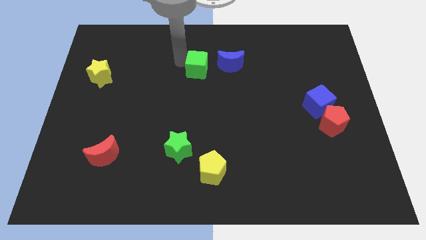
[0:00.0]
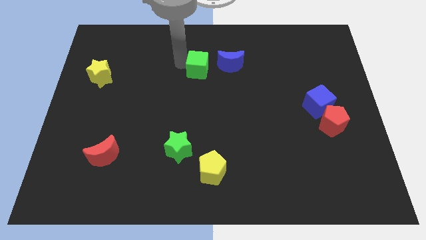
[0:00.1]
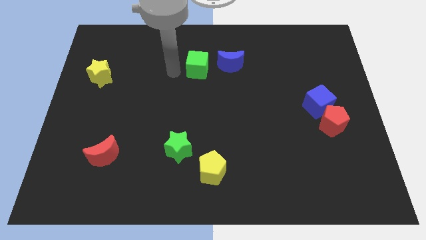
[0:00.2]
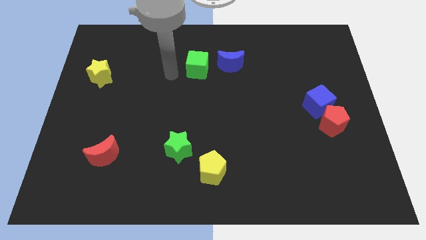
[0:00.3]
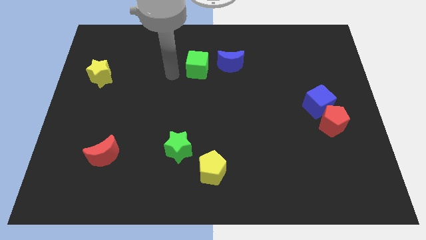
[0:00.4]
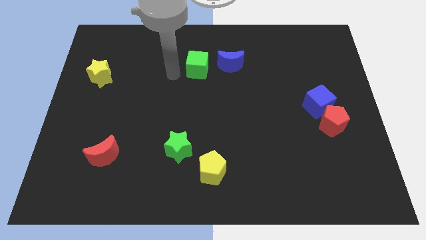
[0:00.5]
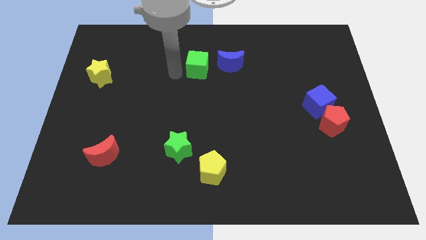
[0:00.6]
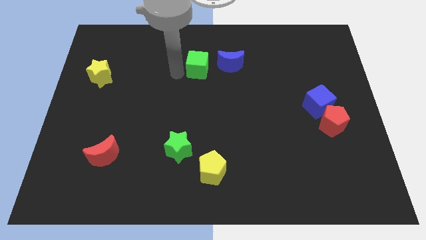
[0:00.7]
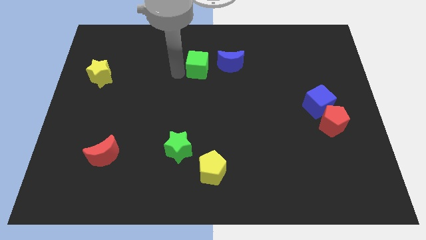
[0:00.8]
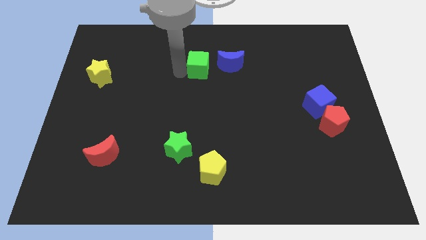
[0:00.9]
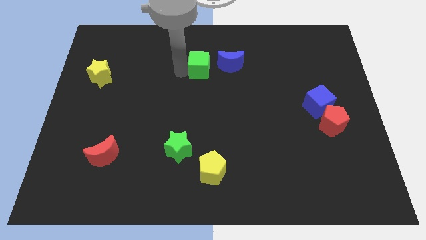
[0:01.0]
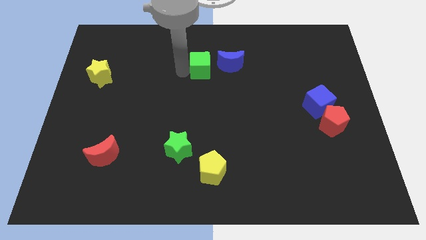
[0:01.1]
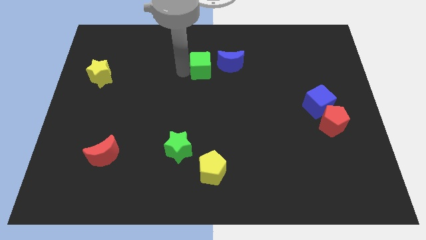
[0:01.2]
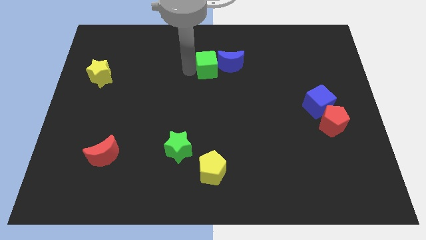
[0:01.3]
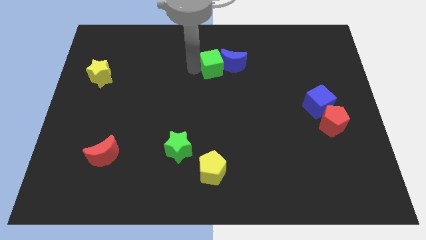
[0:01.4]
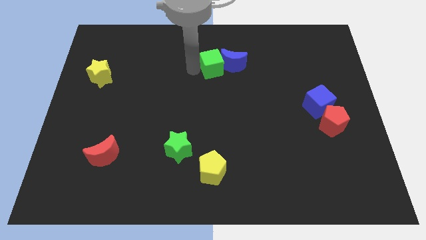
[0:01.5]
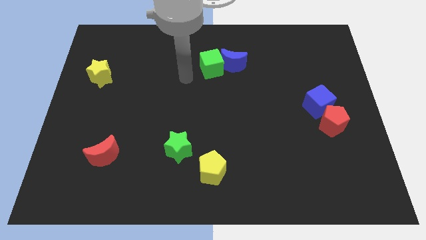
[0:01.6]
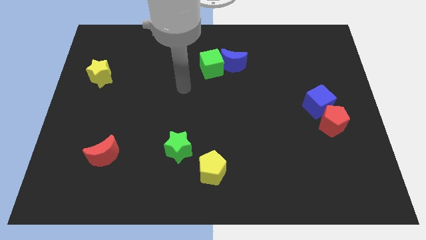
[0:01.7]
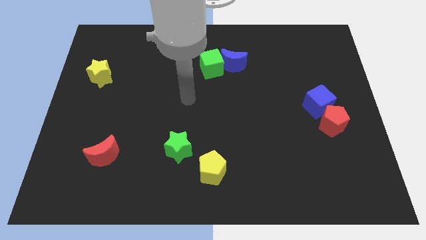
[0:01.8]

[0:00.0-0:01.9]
slide the green cube into the blue moon

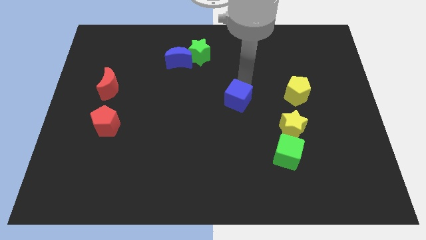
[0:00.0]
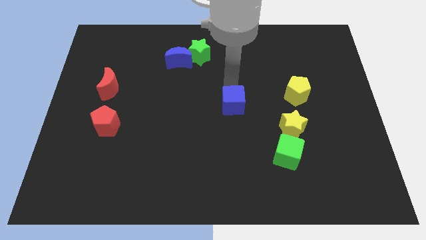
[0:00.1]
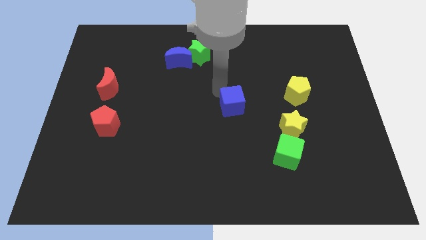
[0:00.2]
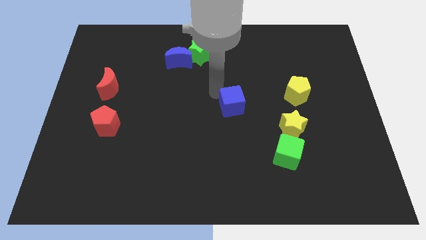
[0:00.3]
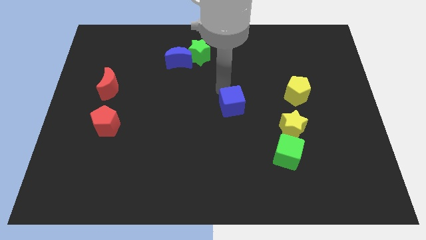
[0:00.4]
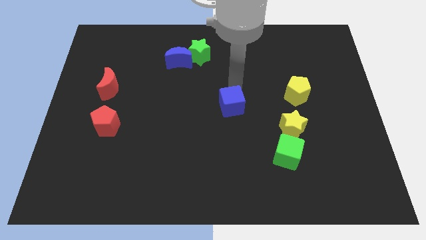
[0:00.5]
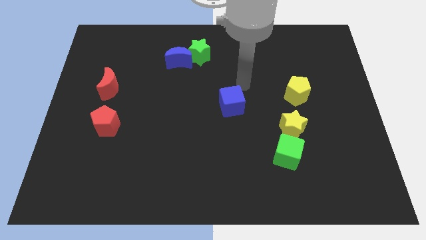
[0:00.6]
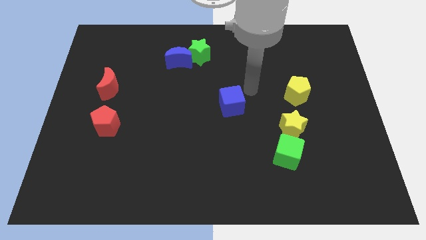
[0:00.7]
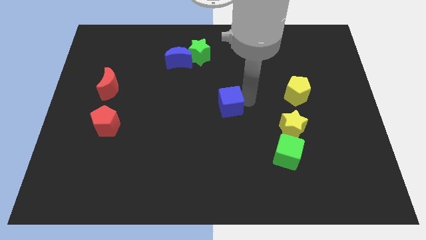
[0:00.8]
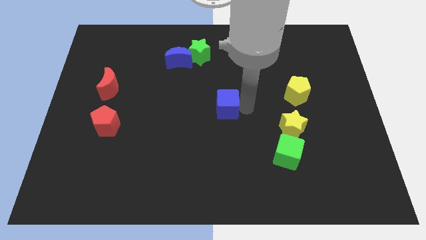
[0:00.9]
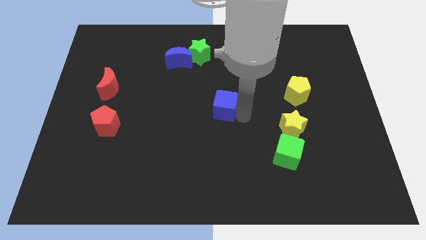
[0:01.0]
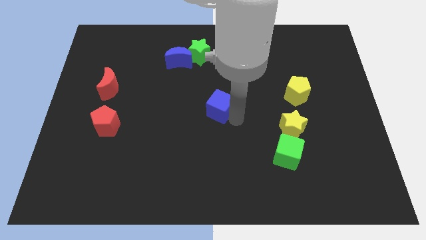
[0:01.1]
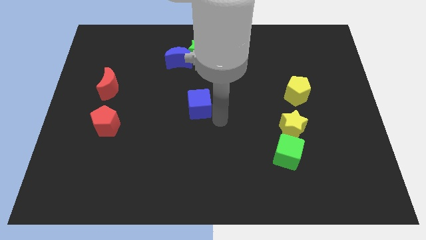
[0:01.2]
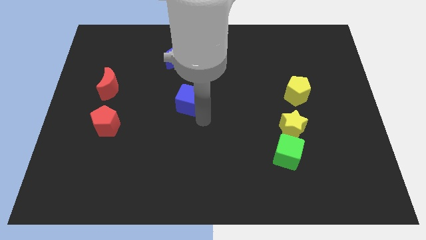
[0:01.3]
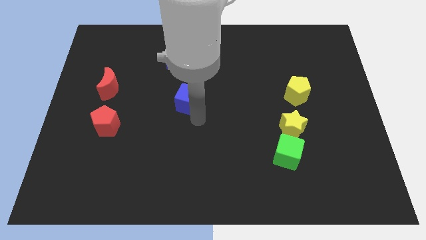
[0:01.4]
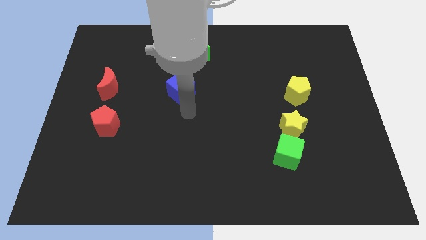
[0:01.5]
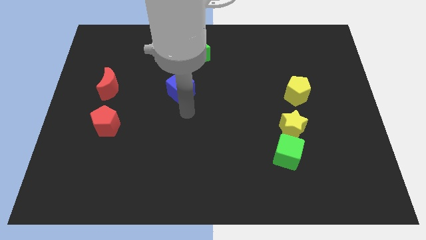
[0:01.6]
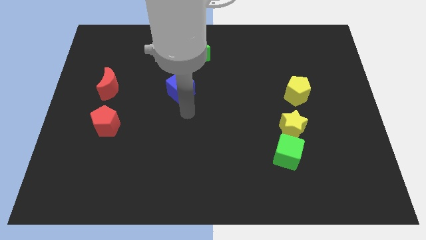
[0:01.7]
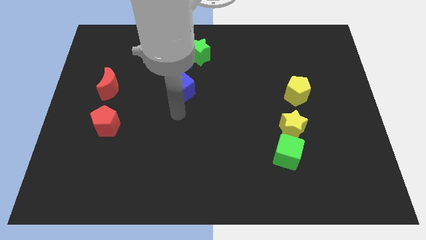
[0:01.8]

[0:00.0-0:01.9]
move the blue cube towards the bottom side of the blue crescent

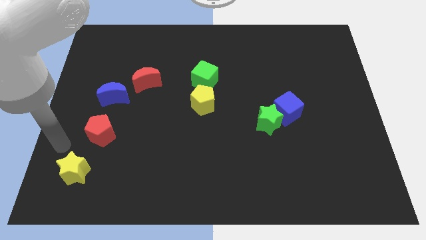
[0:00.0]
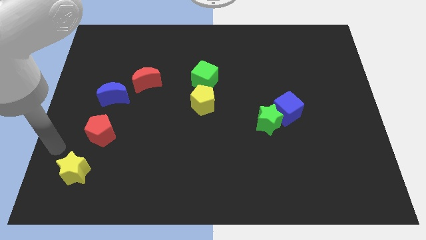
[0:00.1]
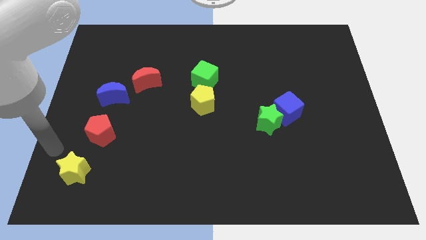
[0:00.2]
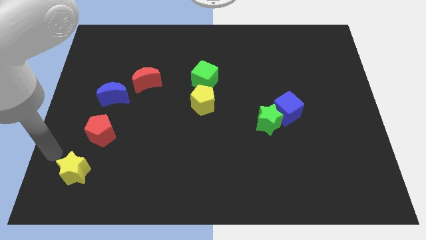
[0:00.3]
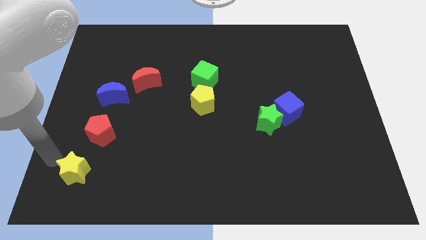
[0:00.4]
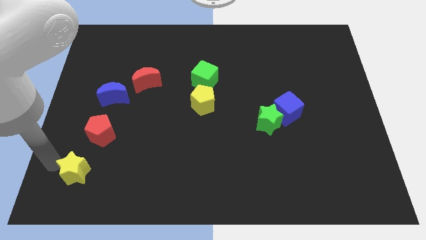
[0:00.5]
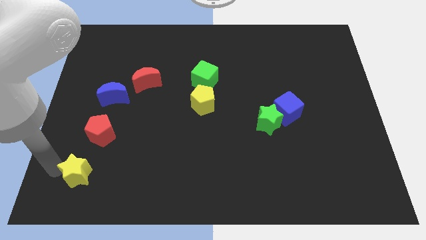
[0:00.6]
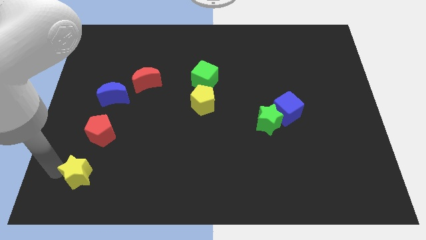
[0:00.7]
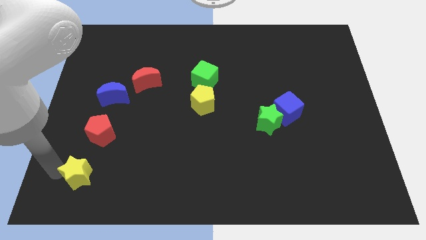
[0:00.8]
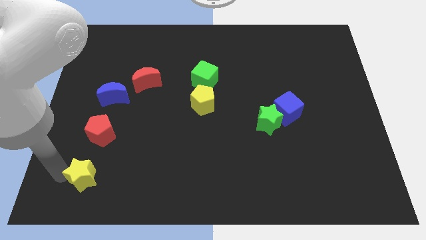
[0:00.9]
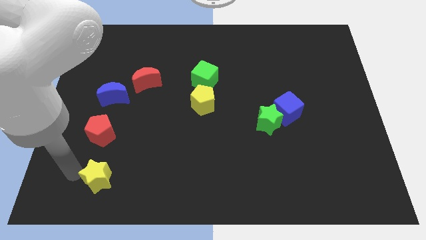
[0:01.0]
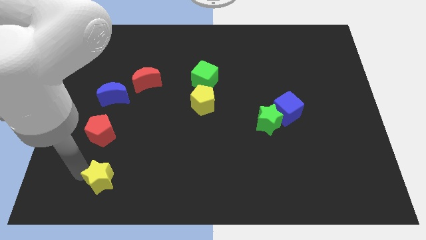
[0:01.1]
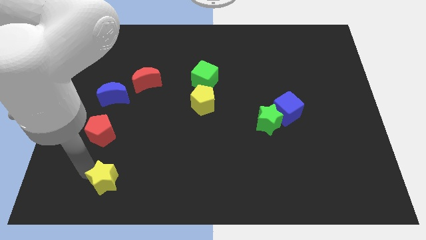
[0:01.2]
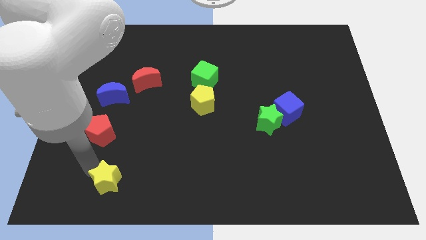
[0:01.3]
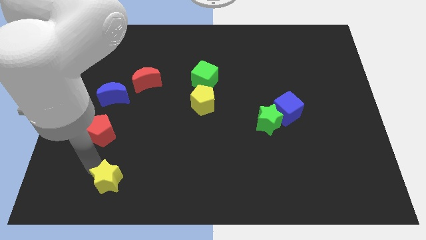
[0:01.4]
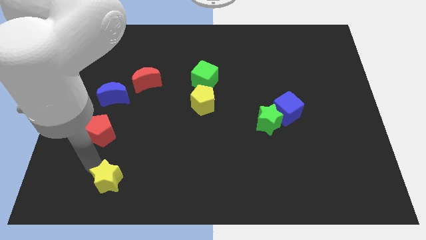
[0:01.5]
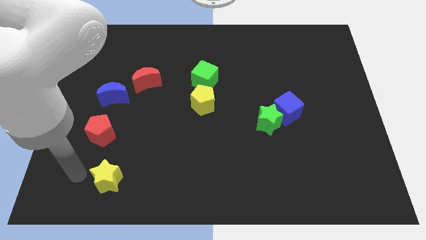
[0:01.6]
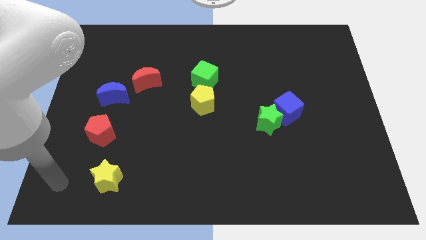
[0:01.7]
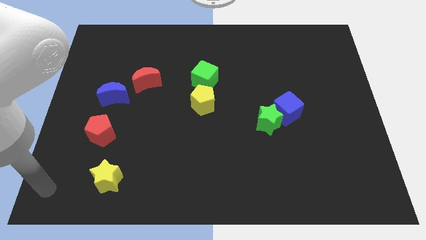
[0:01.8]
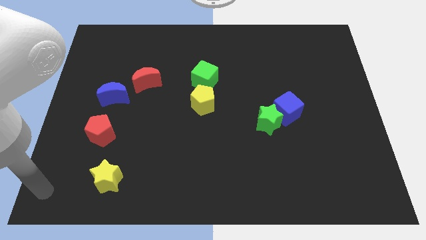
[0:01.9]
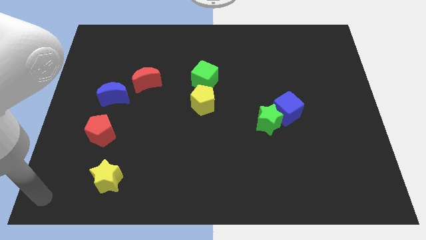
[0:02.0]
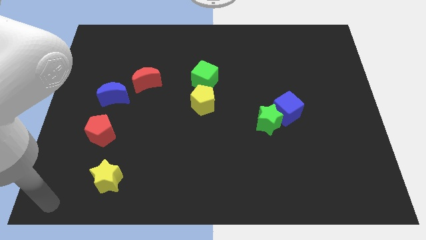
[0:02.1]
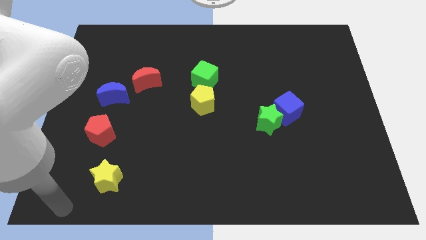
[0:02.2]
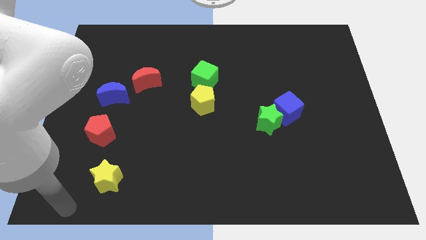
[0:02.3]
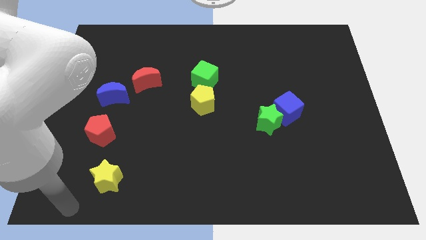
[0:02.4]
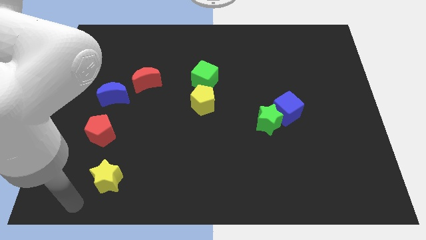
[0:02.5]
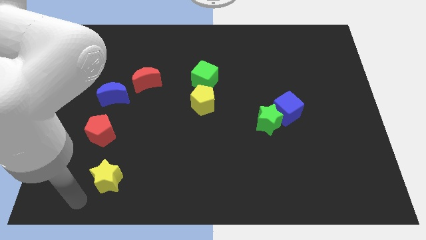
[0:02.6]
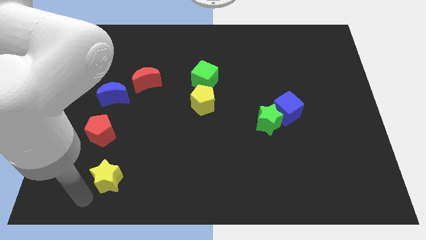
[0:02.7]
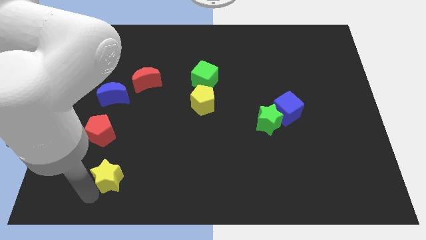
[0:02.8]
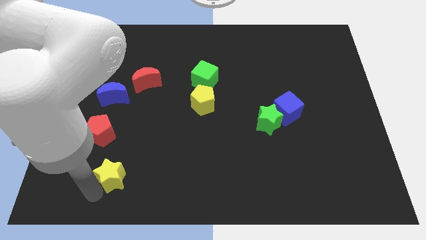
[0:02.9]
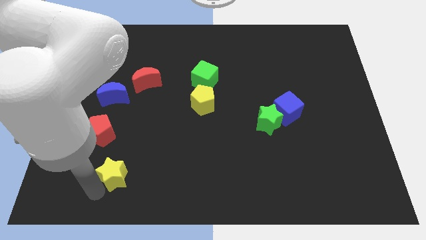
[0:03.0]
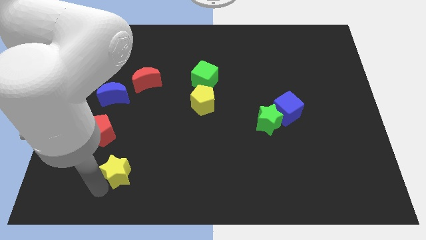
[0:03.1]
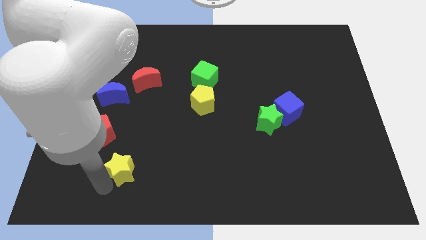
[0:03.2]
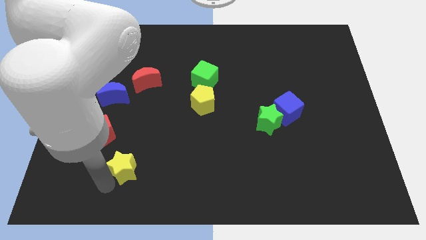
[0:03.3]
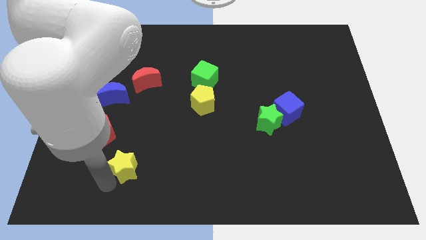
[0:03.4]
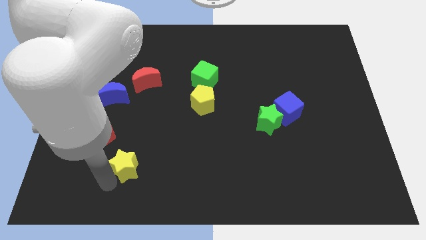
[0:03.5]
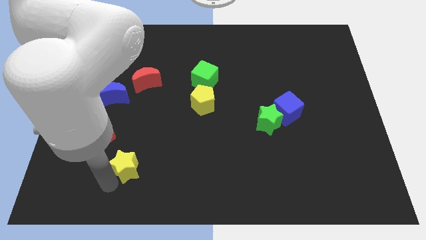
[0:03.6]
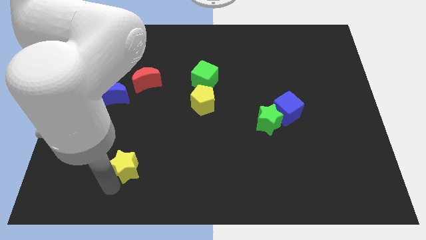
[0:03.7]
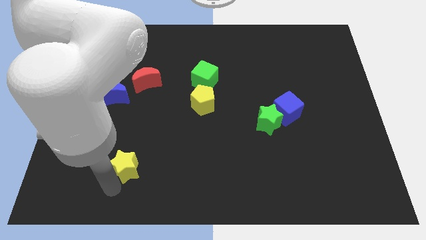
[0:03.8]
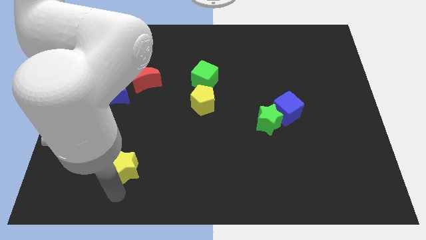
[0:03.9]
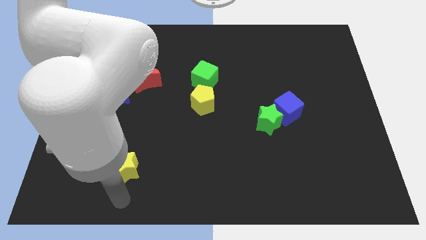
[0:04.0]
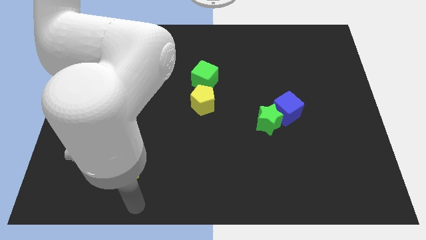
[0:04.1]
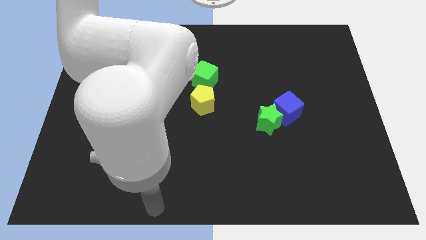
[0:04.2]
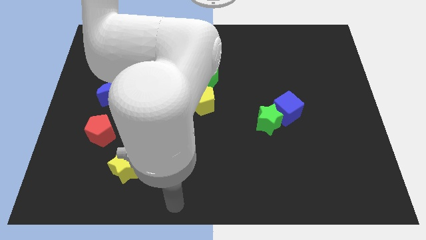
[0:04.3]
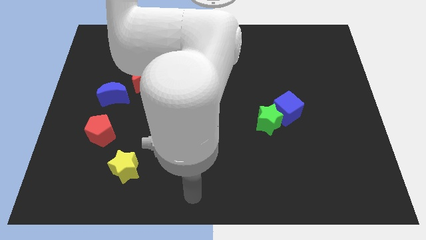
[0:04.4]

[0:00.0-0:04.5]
place the yellow star diagonally below the bottom right side of the red pentagon

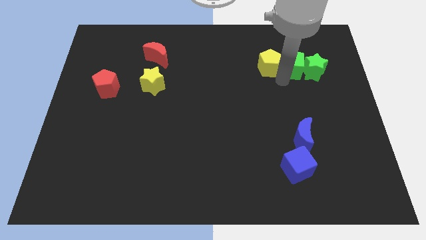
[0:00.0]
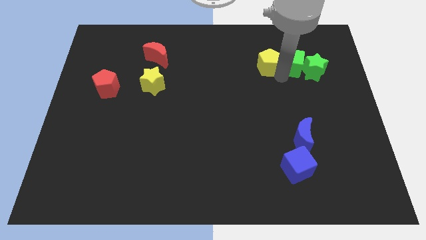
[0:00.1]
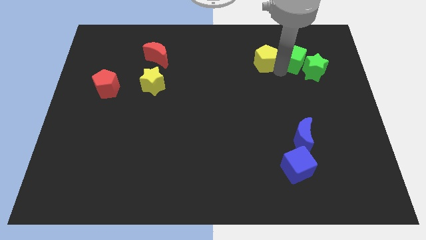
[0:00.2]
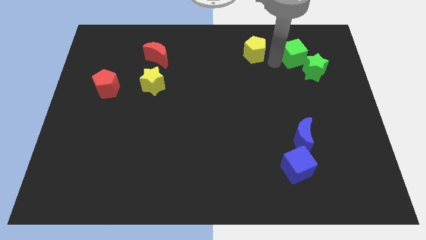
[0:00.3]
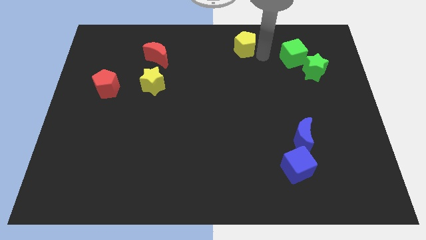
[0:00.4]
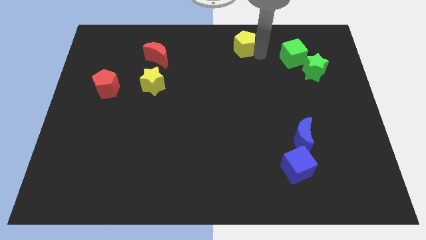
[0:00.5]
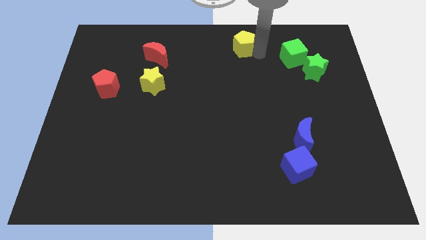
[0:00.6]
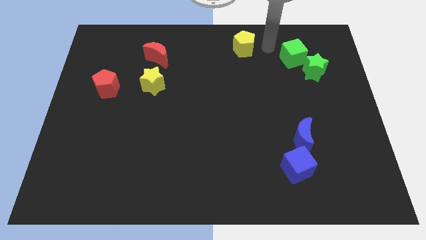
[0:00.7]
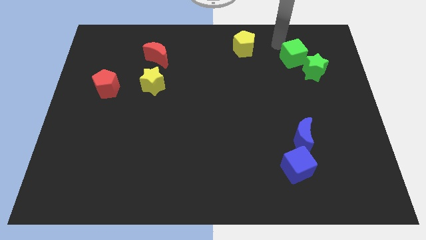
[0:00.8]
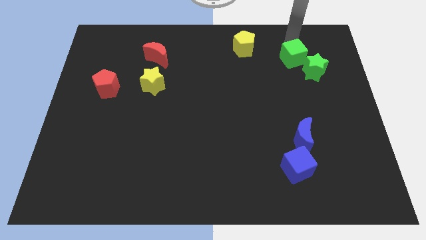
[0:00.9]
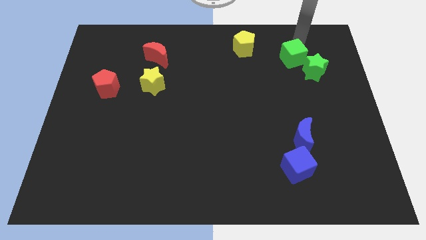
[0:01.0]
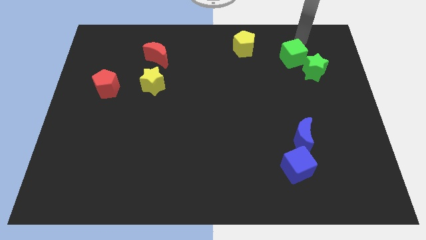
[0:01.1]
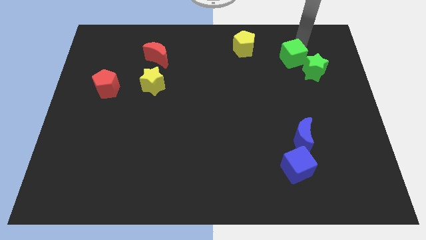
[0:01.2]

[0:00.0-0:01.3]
separate the yellow pentagon from the green cube
